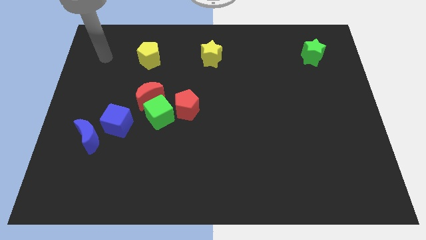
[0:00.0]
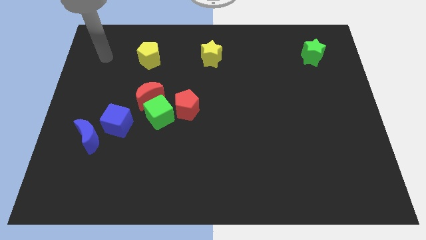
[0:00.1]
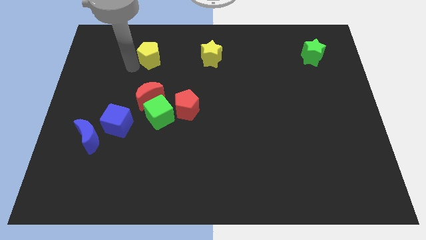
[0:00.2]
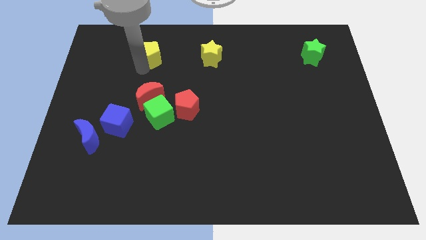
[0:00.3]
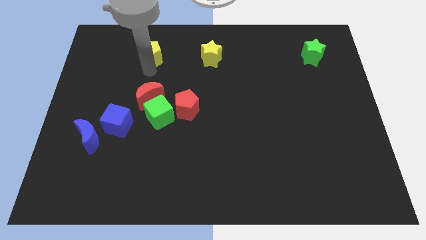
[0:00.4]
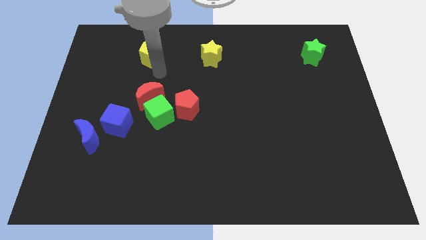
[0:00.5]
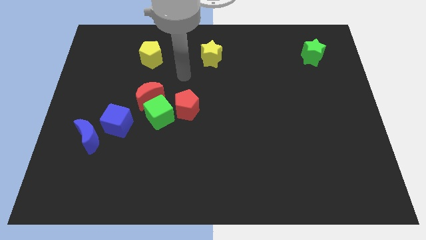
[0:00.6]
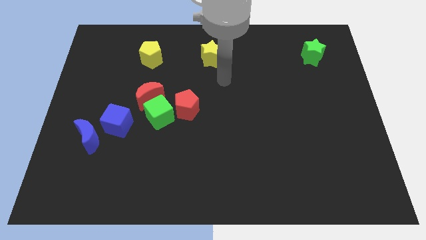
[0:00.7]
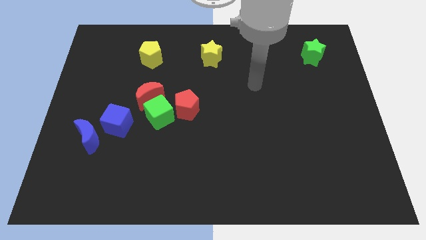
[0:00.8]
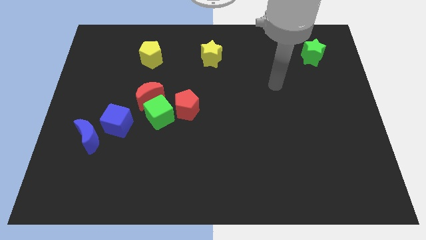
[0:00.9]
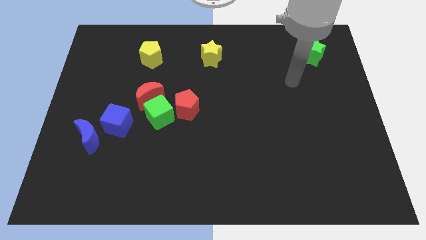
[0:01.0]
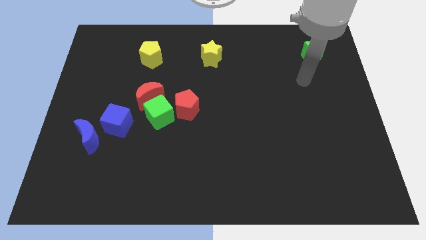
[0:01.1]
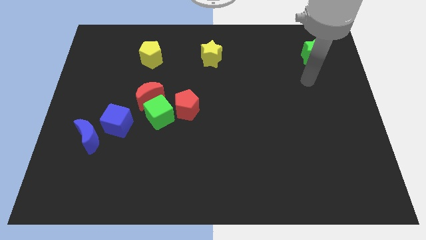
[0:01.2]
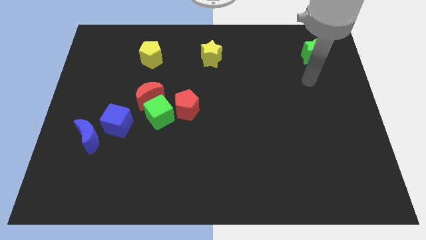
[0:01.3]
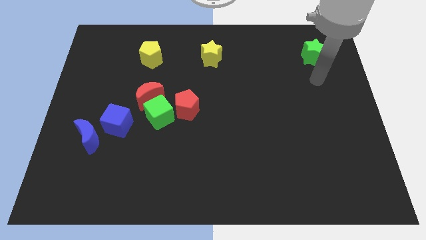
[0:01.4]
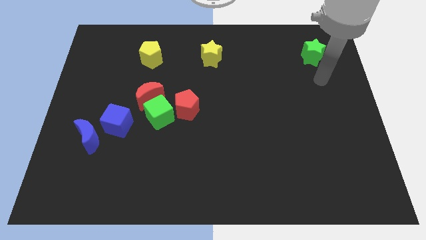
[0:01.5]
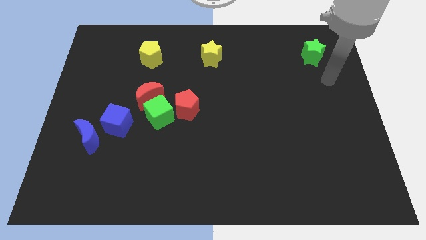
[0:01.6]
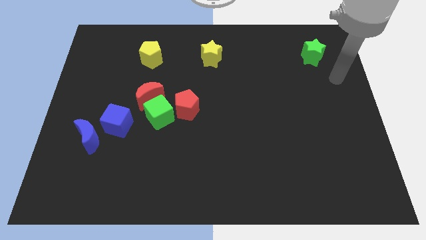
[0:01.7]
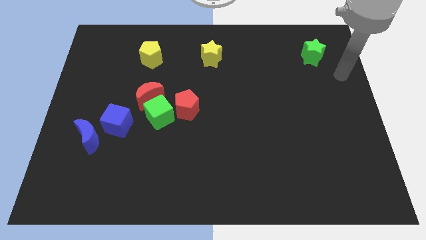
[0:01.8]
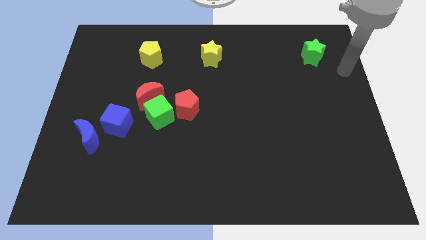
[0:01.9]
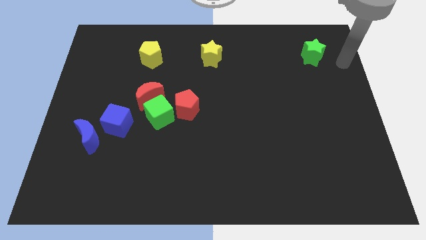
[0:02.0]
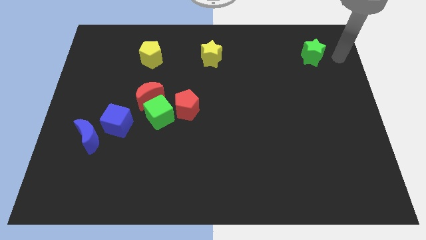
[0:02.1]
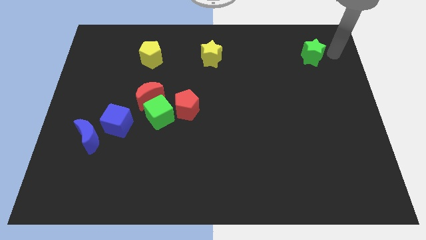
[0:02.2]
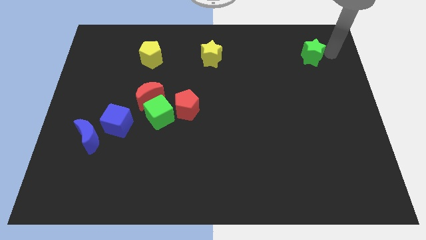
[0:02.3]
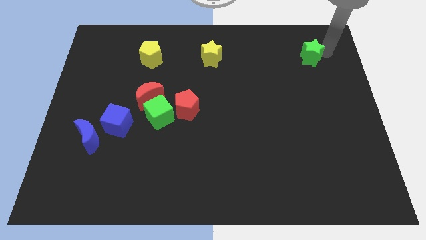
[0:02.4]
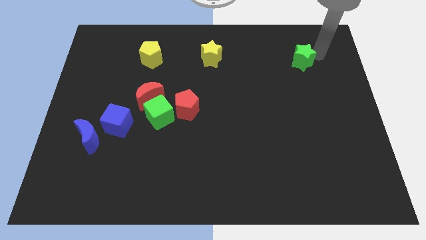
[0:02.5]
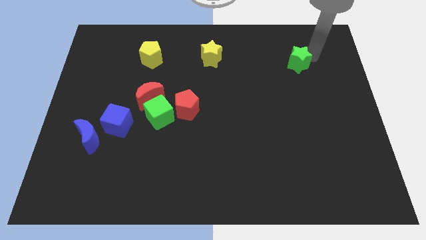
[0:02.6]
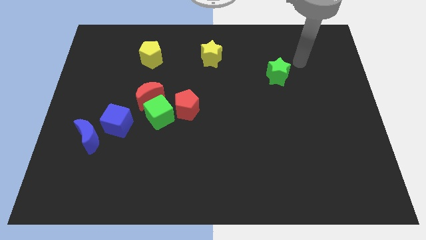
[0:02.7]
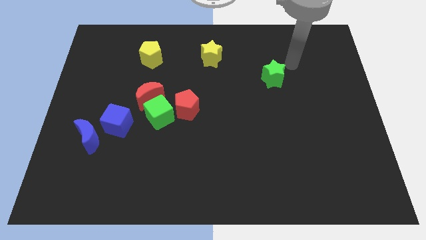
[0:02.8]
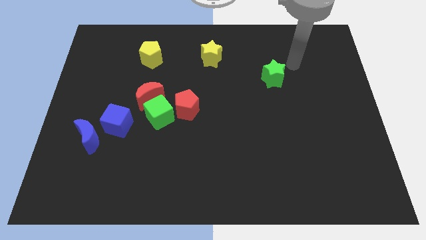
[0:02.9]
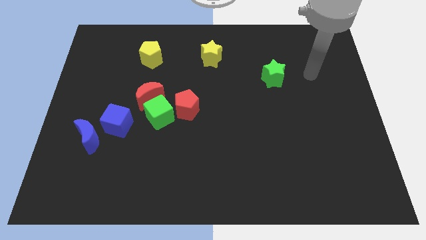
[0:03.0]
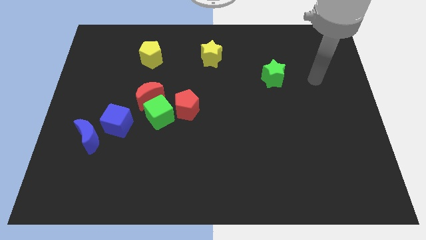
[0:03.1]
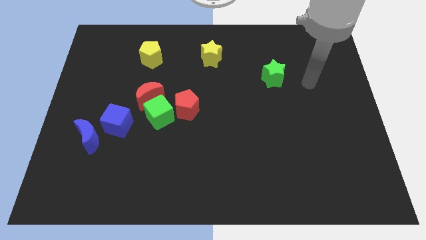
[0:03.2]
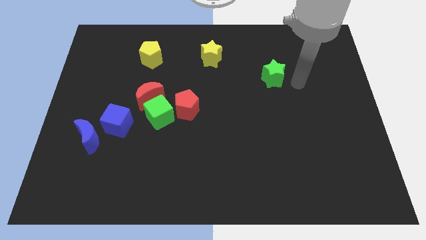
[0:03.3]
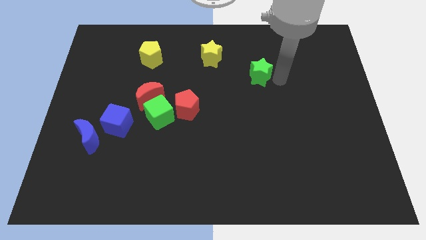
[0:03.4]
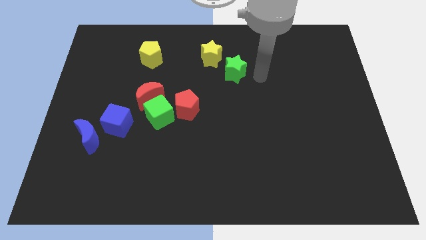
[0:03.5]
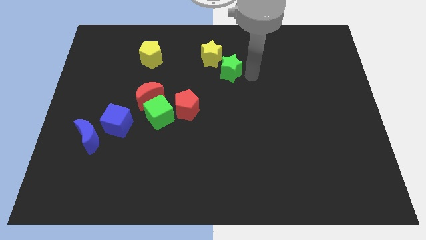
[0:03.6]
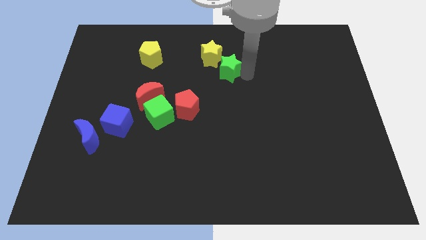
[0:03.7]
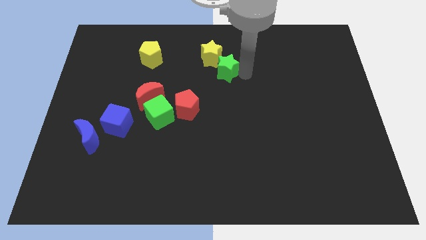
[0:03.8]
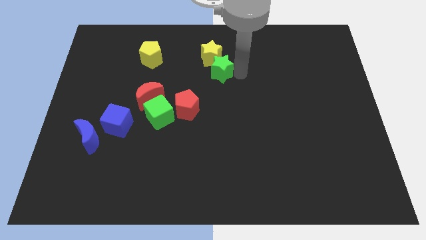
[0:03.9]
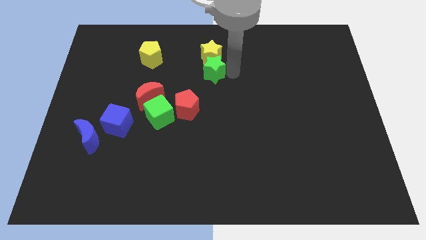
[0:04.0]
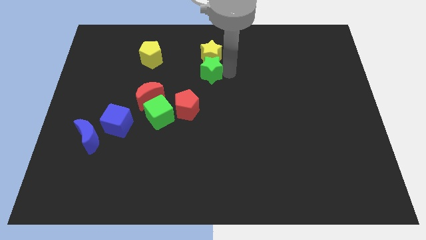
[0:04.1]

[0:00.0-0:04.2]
put the green star next to the yellow star

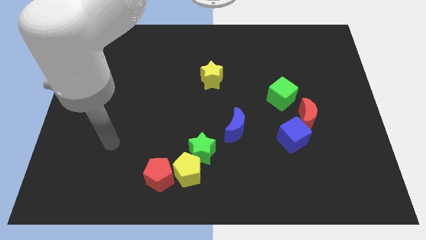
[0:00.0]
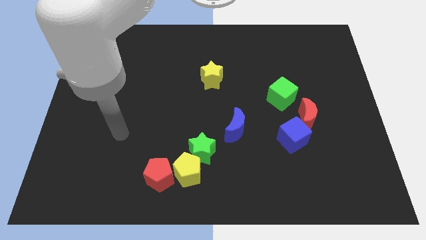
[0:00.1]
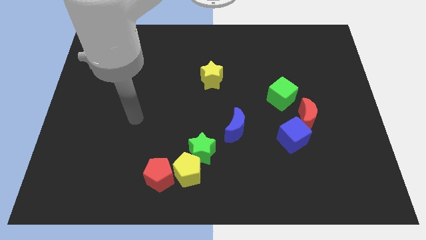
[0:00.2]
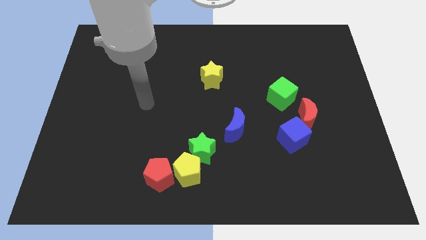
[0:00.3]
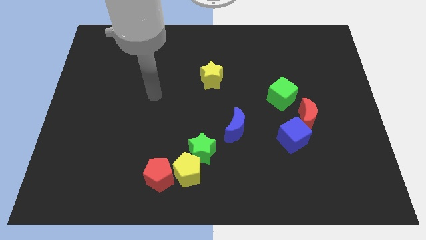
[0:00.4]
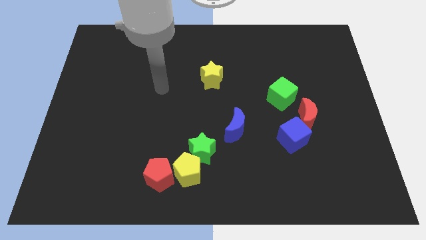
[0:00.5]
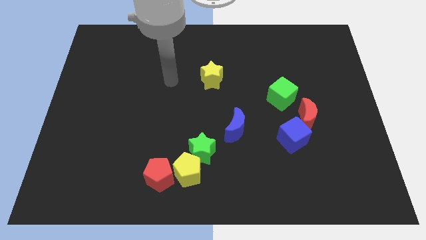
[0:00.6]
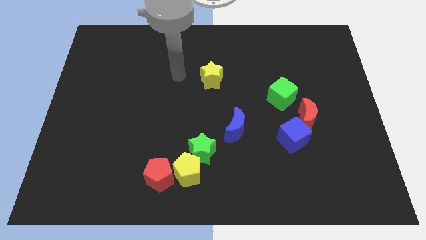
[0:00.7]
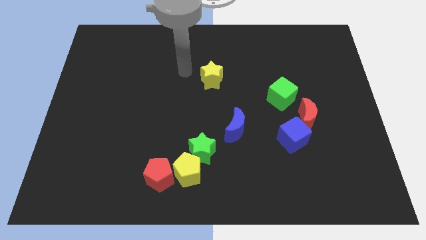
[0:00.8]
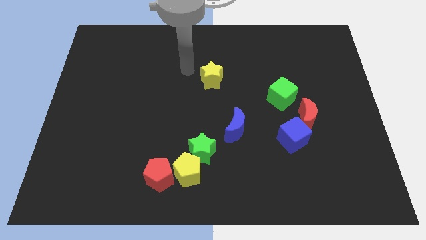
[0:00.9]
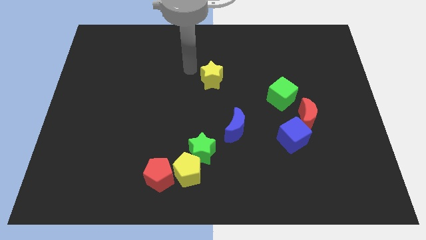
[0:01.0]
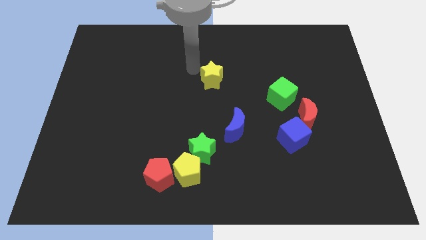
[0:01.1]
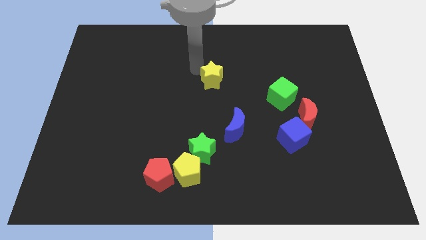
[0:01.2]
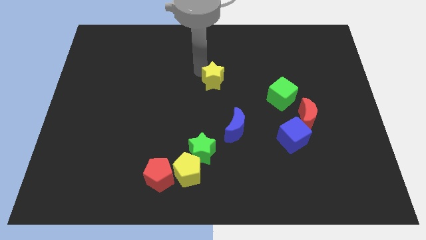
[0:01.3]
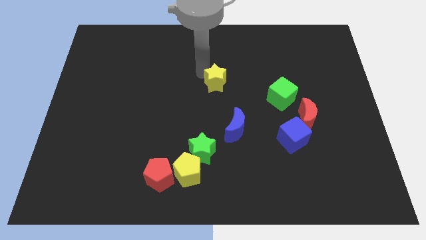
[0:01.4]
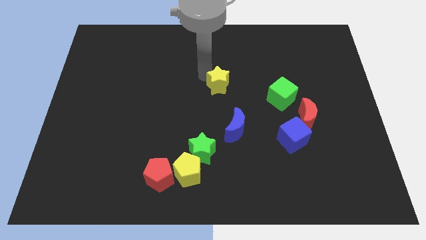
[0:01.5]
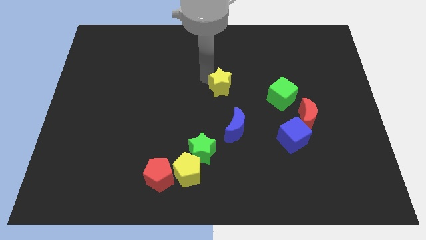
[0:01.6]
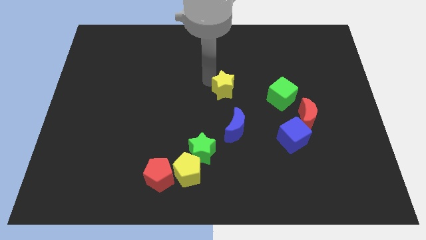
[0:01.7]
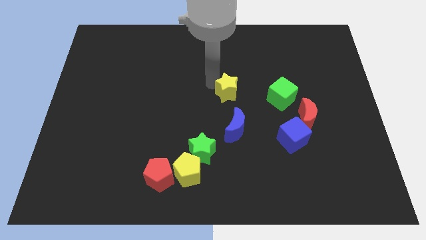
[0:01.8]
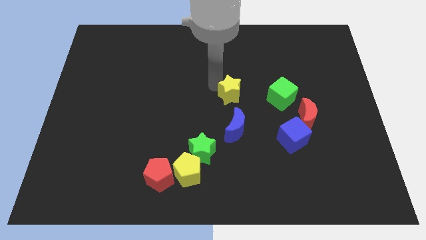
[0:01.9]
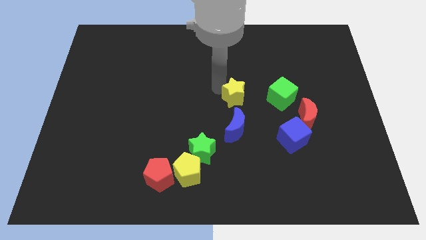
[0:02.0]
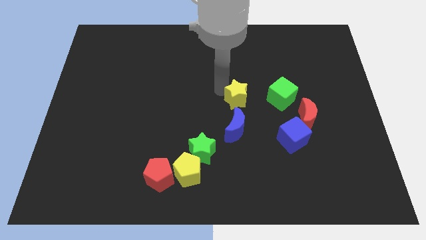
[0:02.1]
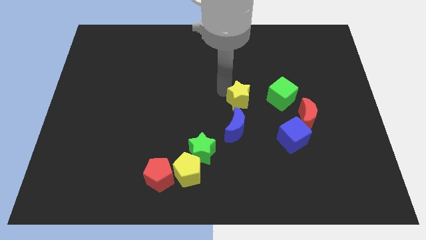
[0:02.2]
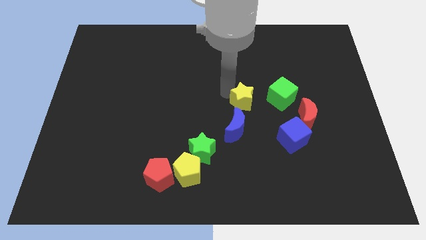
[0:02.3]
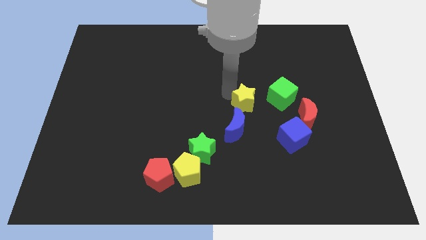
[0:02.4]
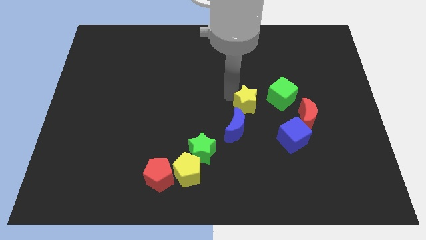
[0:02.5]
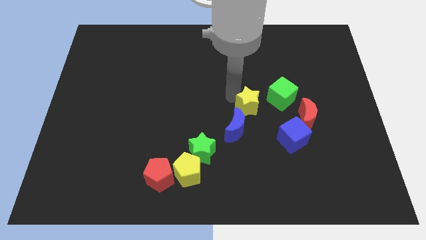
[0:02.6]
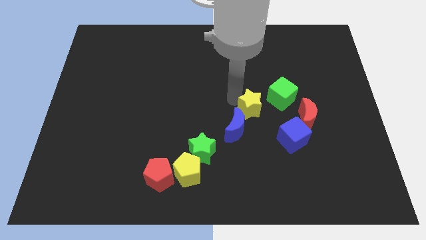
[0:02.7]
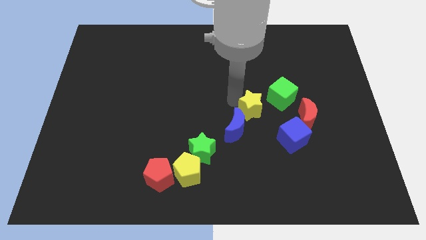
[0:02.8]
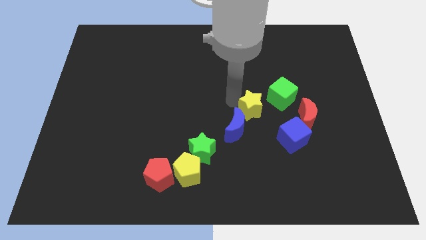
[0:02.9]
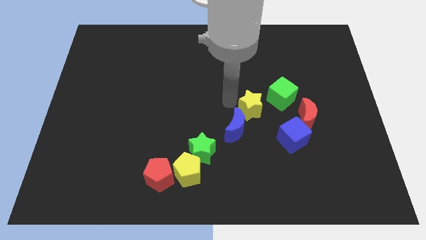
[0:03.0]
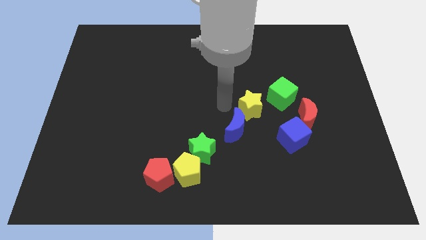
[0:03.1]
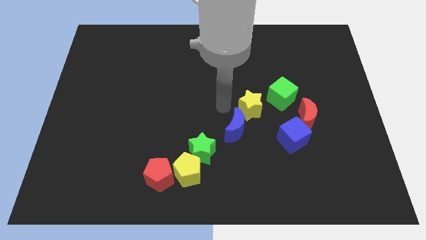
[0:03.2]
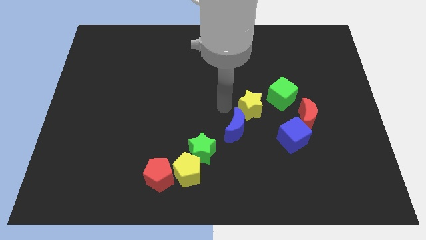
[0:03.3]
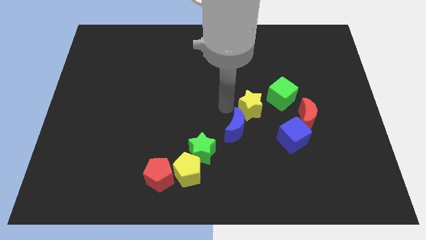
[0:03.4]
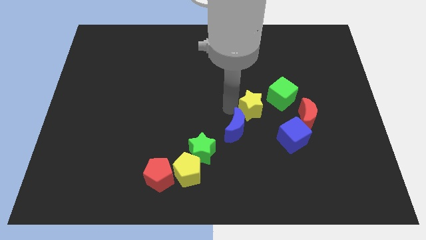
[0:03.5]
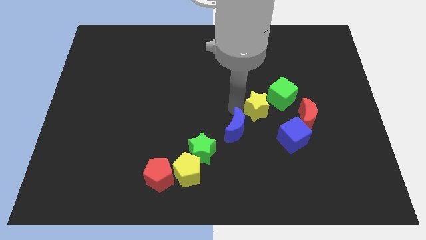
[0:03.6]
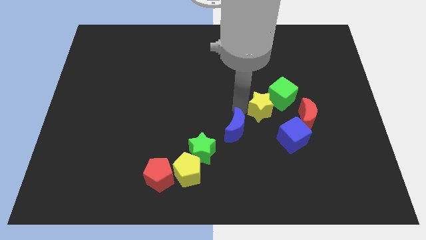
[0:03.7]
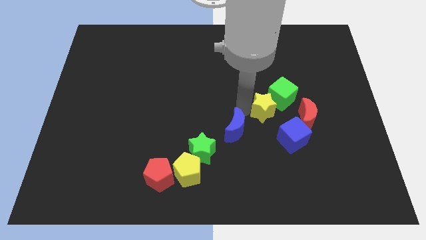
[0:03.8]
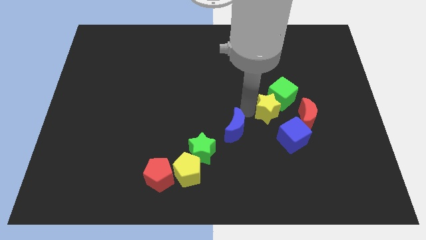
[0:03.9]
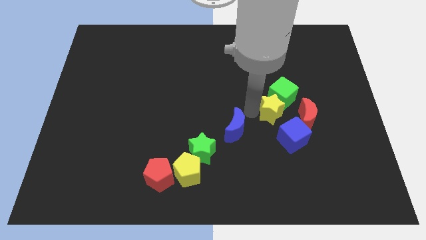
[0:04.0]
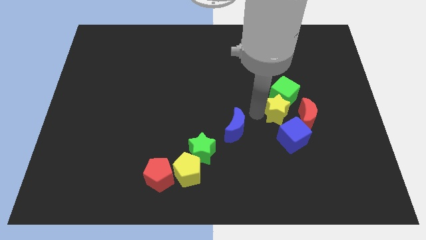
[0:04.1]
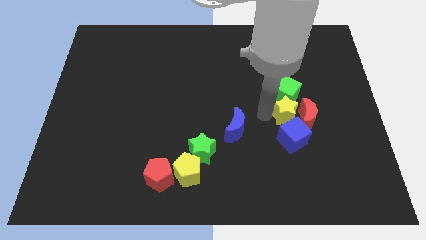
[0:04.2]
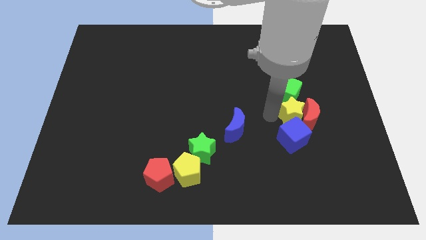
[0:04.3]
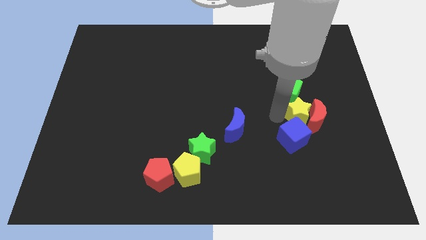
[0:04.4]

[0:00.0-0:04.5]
put the yellow star next to the red moon
